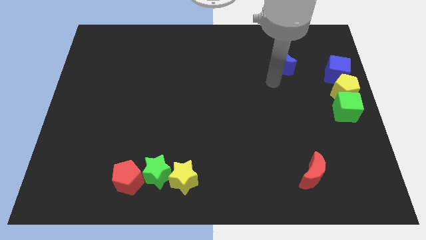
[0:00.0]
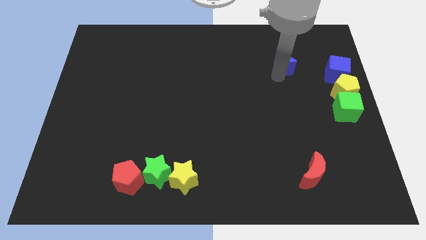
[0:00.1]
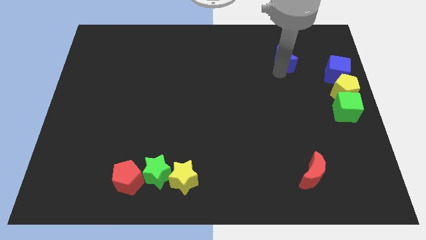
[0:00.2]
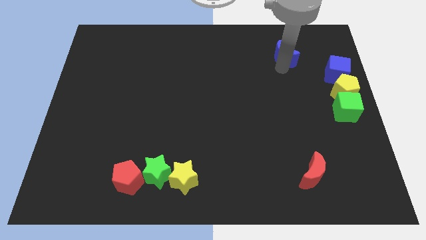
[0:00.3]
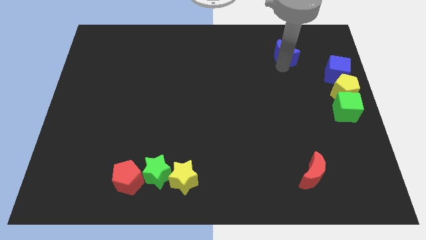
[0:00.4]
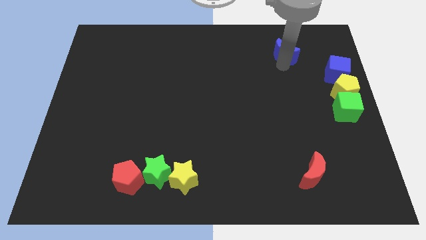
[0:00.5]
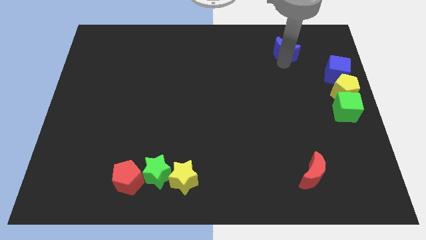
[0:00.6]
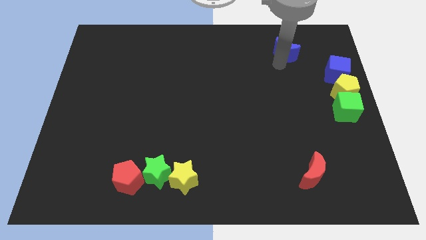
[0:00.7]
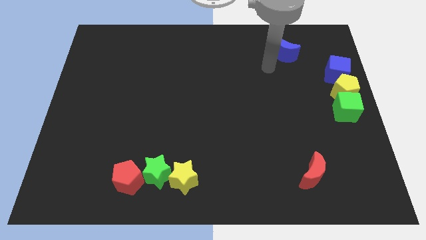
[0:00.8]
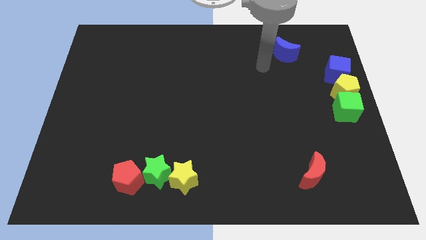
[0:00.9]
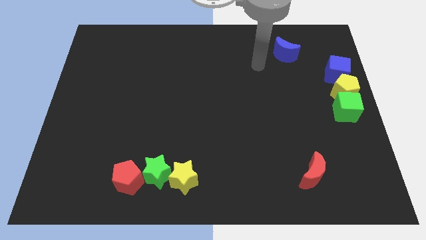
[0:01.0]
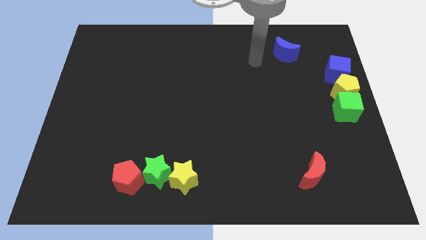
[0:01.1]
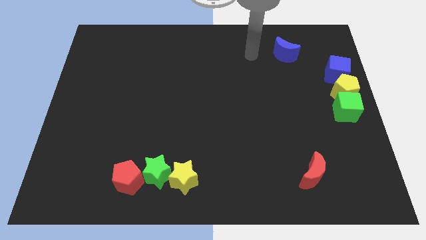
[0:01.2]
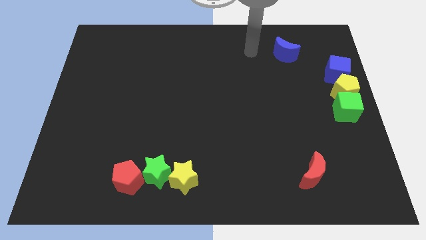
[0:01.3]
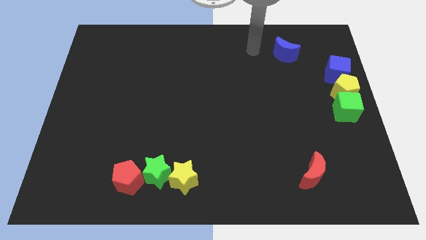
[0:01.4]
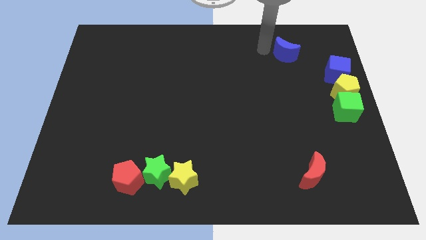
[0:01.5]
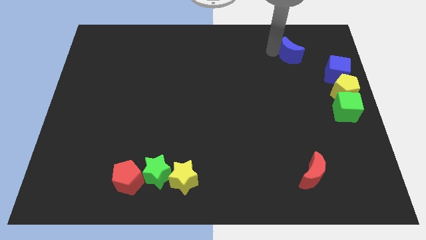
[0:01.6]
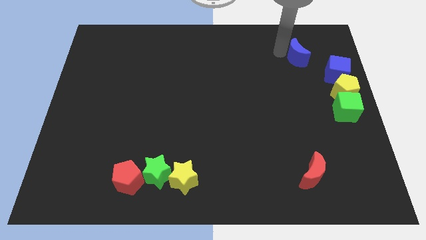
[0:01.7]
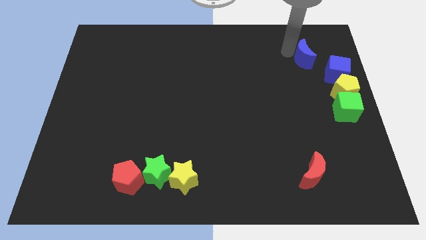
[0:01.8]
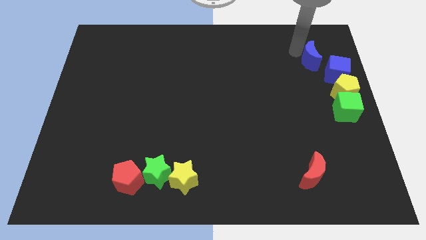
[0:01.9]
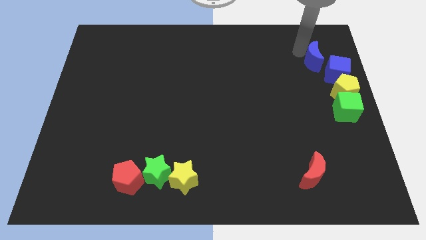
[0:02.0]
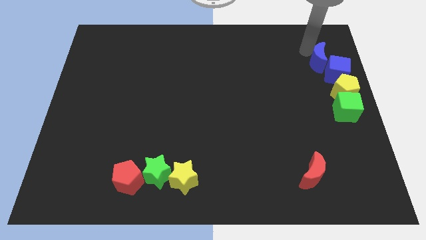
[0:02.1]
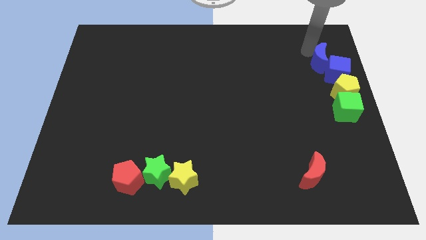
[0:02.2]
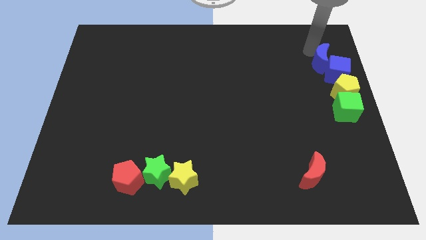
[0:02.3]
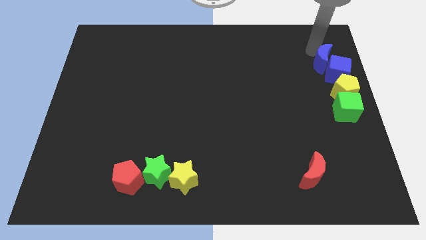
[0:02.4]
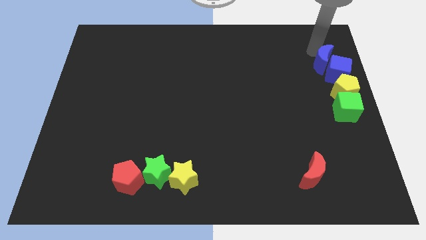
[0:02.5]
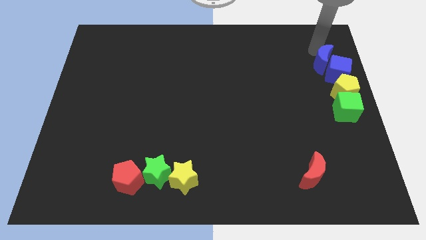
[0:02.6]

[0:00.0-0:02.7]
push the blue moon to the left side of the blue cube

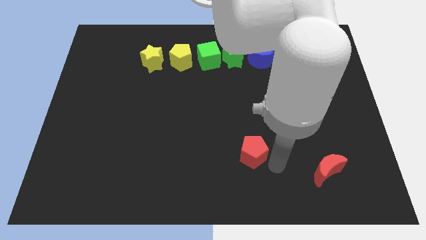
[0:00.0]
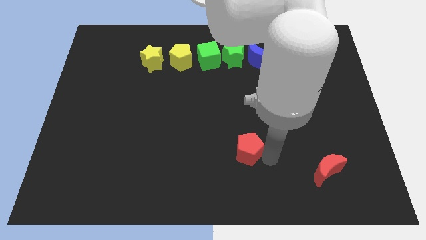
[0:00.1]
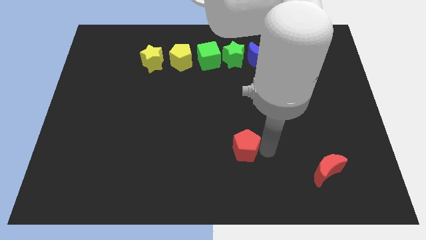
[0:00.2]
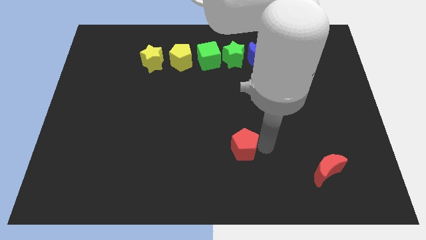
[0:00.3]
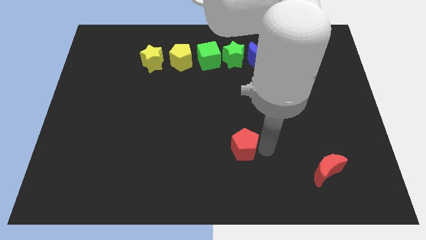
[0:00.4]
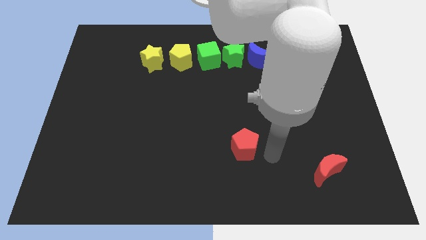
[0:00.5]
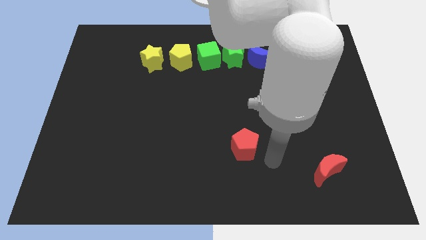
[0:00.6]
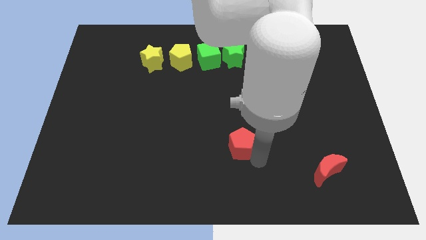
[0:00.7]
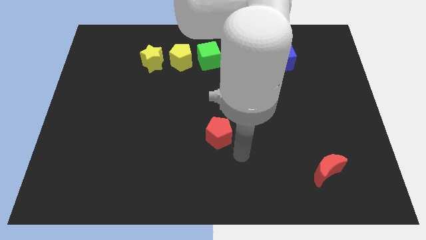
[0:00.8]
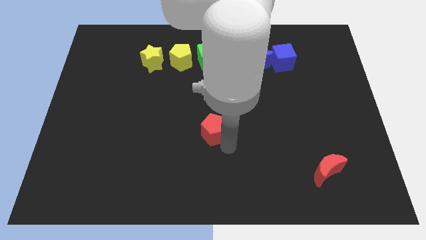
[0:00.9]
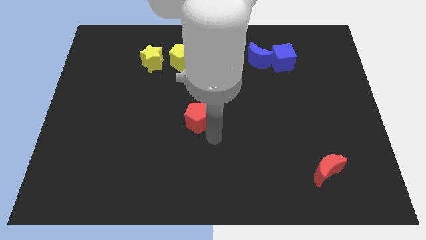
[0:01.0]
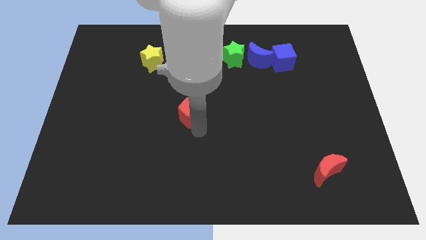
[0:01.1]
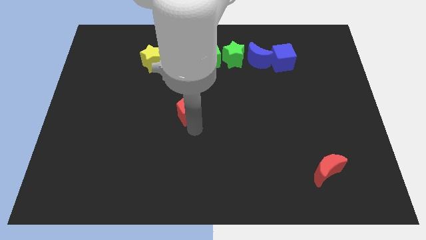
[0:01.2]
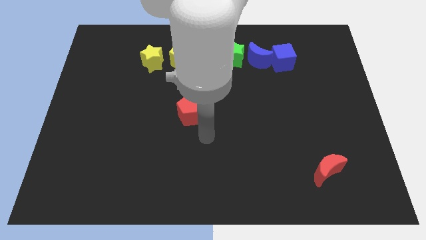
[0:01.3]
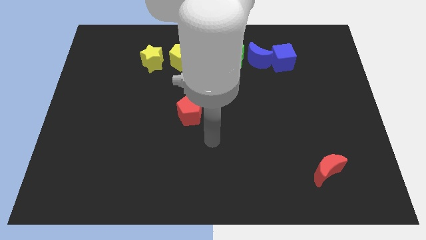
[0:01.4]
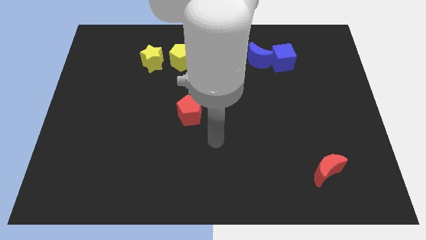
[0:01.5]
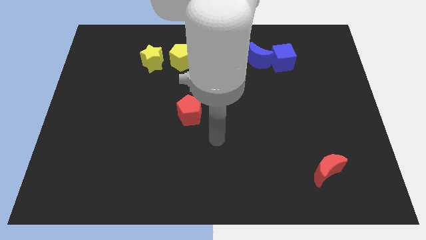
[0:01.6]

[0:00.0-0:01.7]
push the red pentagon towards the yellow star

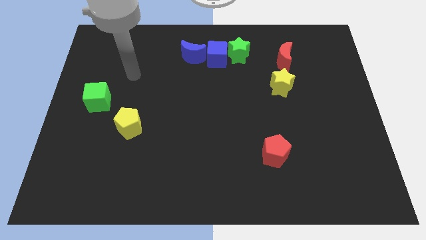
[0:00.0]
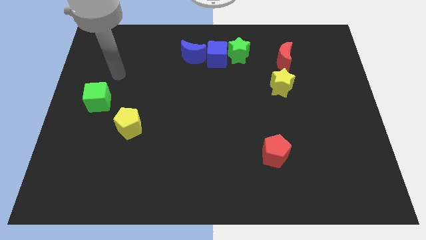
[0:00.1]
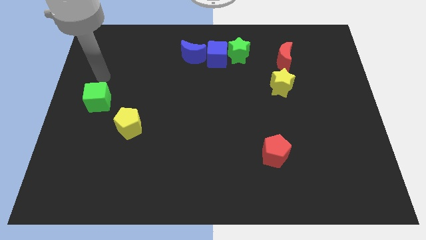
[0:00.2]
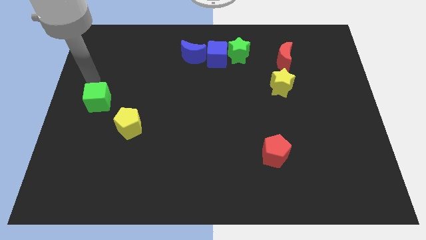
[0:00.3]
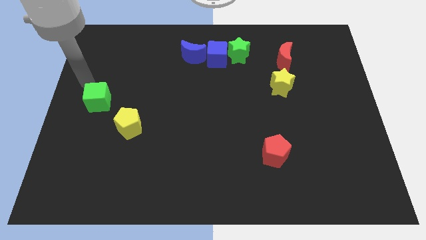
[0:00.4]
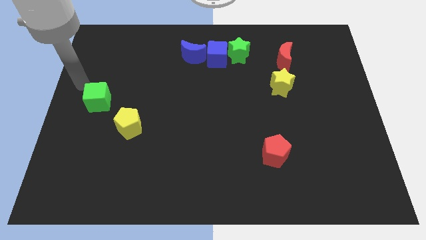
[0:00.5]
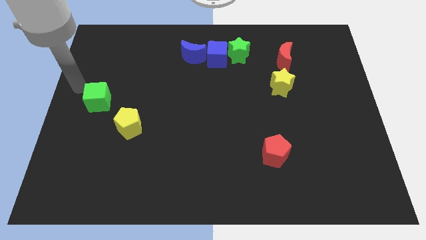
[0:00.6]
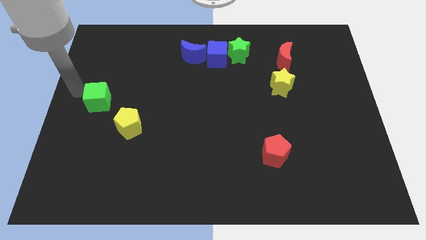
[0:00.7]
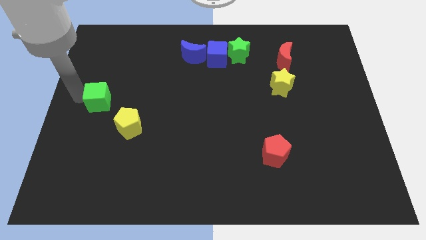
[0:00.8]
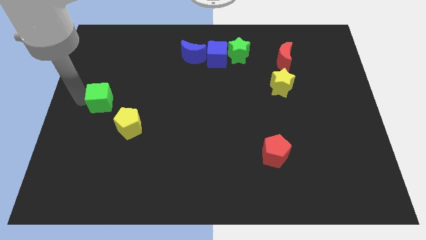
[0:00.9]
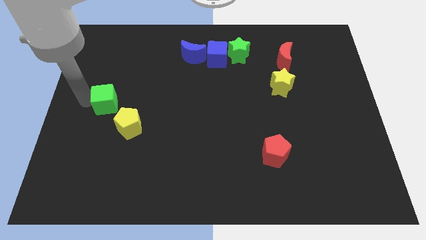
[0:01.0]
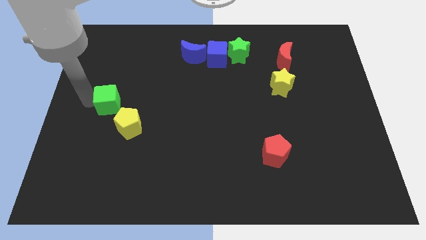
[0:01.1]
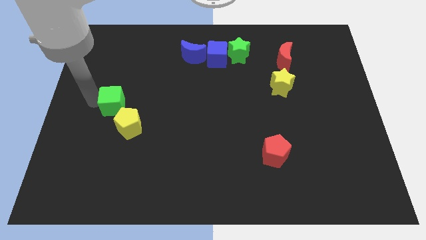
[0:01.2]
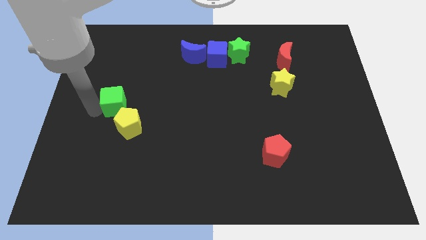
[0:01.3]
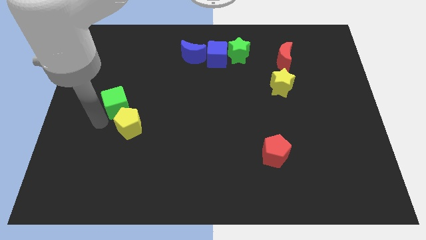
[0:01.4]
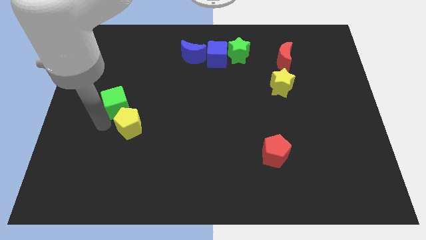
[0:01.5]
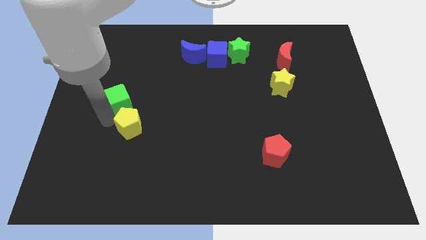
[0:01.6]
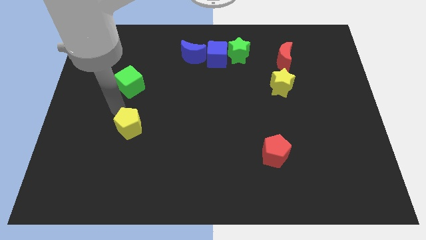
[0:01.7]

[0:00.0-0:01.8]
place the green cube above the yellow pentagon

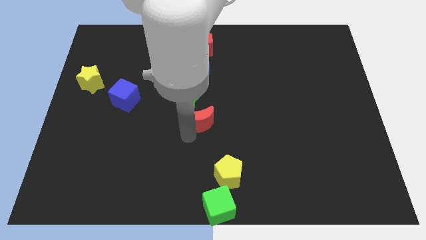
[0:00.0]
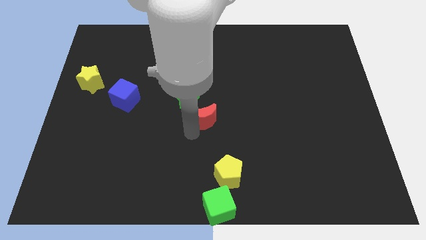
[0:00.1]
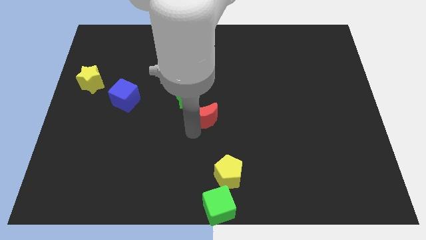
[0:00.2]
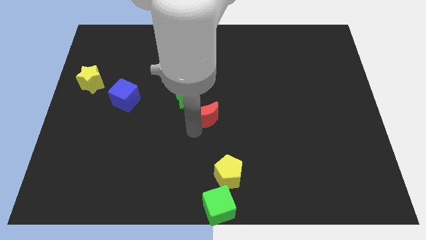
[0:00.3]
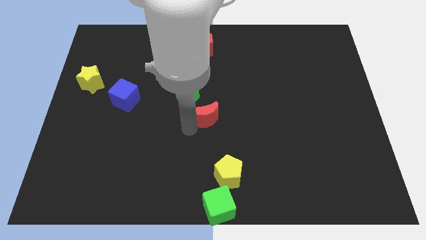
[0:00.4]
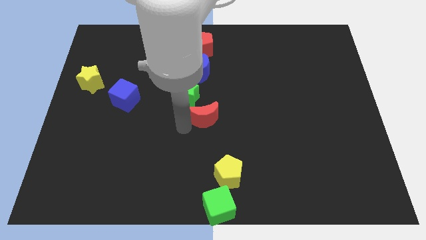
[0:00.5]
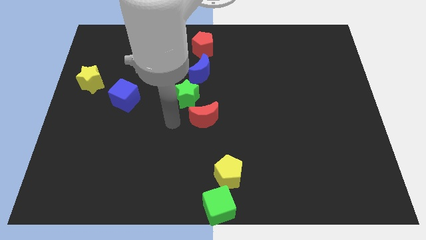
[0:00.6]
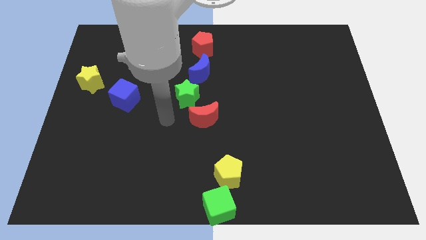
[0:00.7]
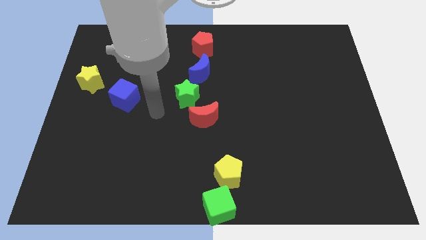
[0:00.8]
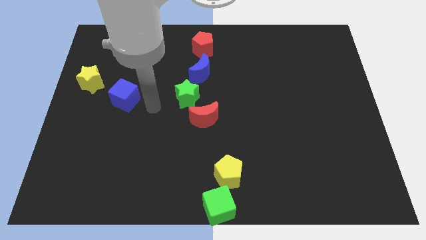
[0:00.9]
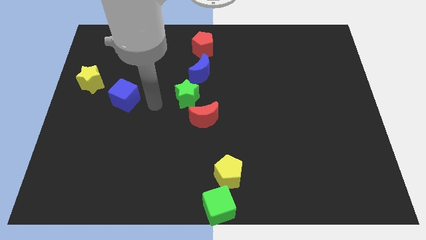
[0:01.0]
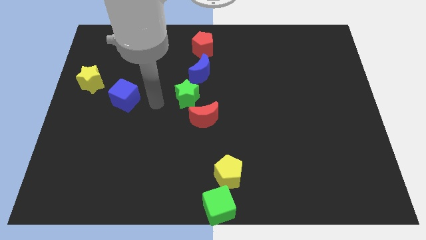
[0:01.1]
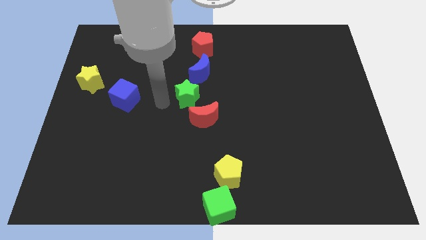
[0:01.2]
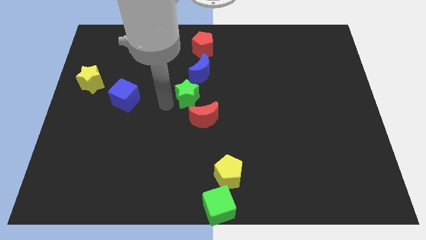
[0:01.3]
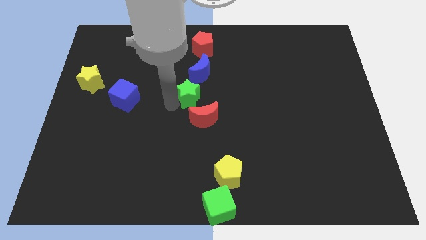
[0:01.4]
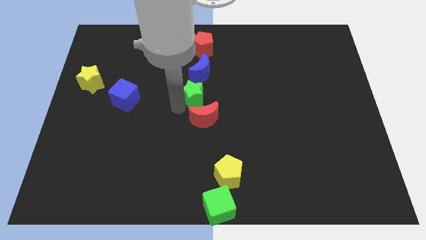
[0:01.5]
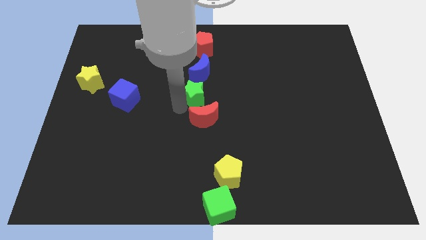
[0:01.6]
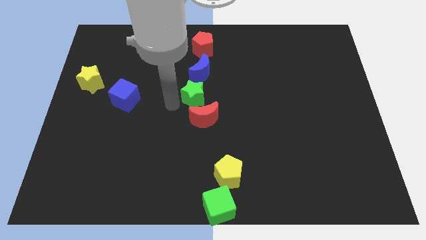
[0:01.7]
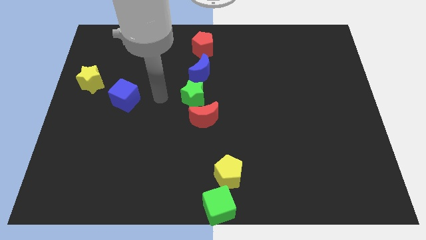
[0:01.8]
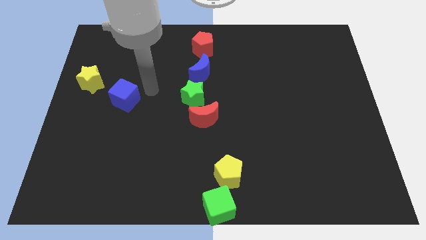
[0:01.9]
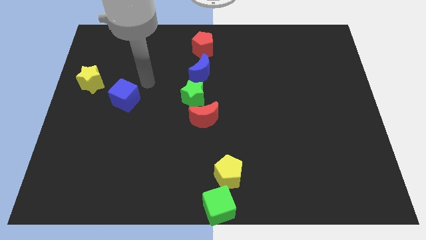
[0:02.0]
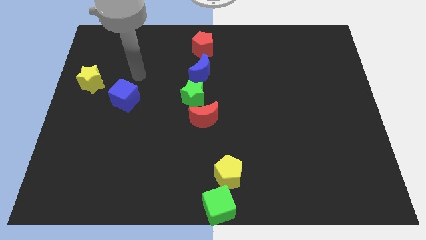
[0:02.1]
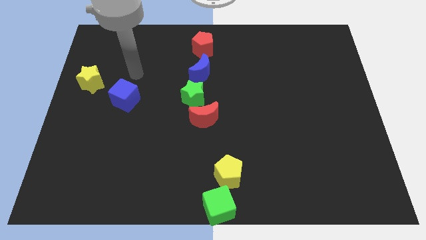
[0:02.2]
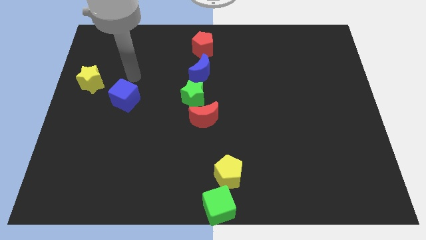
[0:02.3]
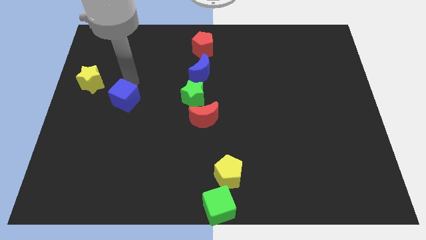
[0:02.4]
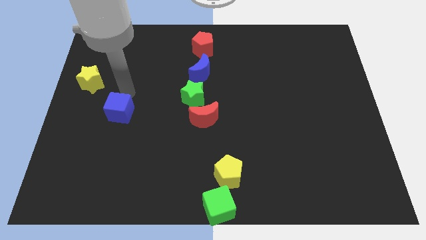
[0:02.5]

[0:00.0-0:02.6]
place green star in between blue and red moons

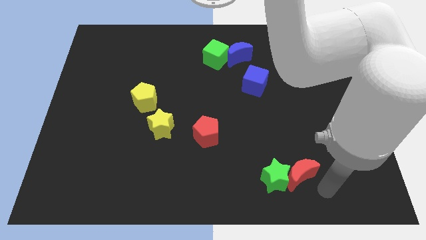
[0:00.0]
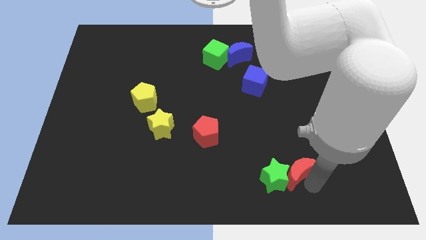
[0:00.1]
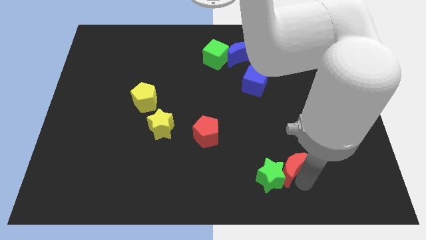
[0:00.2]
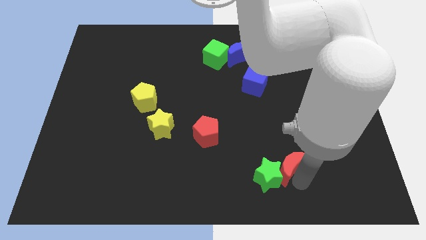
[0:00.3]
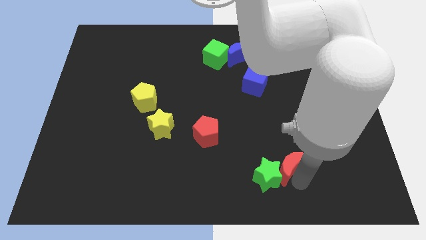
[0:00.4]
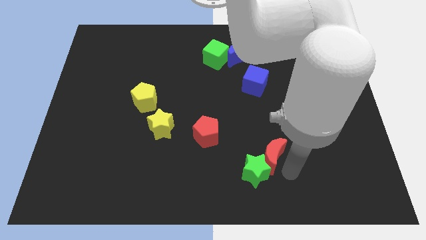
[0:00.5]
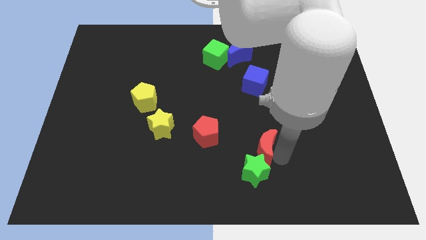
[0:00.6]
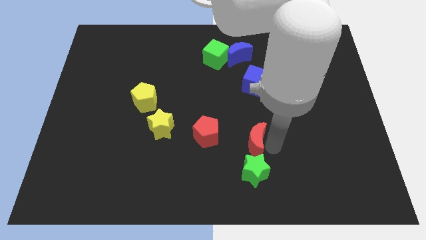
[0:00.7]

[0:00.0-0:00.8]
slide the red moon above the green star
